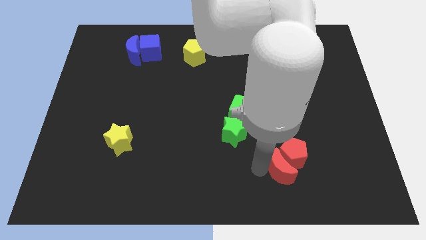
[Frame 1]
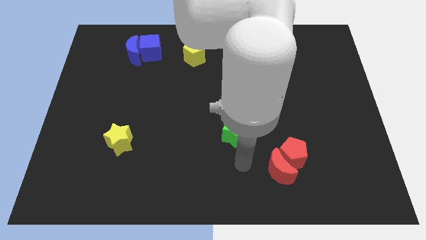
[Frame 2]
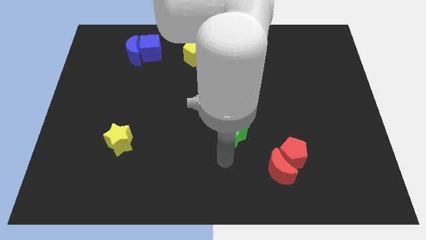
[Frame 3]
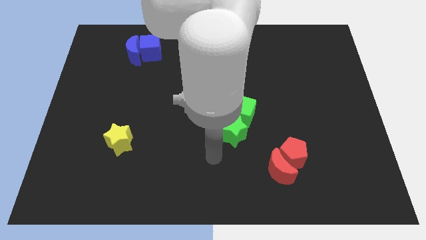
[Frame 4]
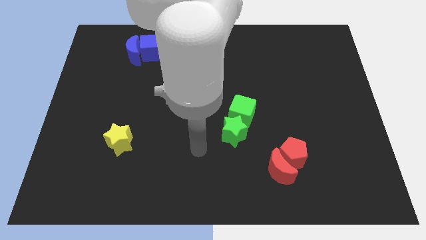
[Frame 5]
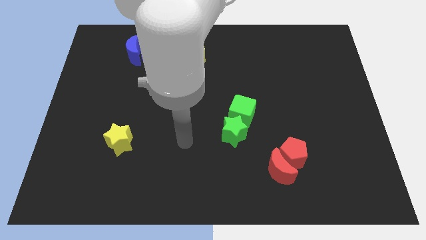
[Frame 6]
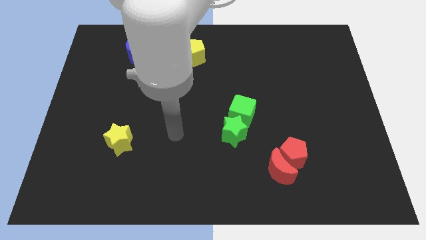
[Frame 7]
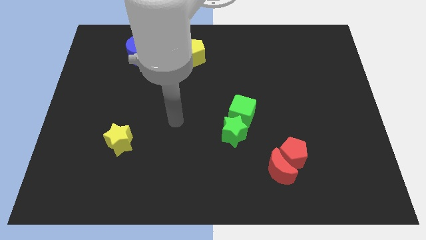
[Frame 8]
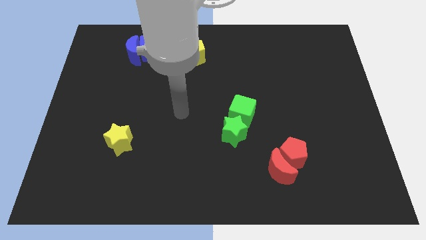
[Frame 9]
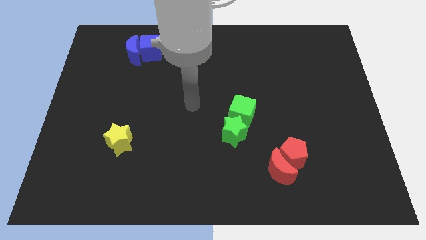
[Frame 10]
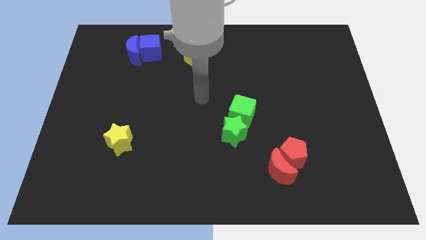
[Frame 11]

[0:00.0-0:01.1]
move your hand away from red moon

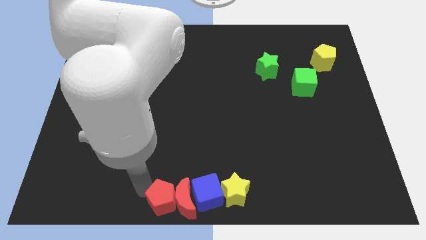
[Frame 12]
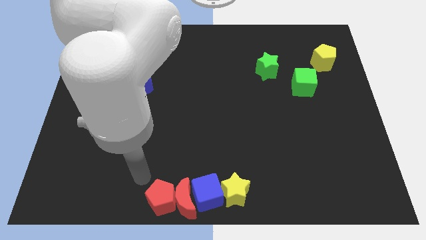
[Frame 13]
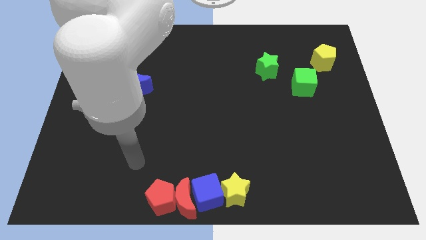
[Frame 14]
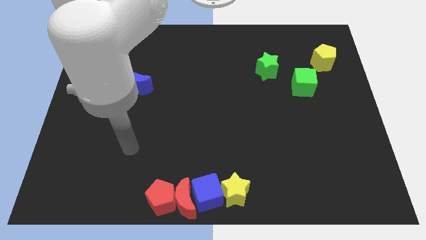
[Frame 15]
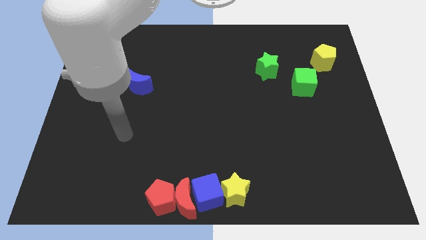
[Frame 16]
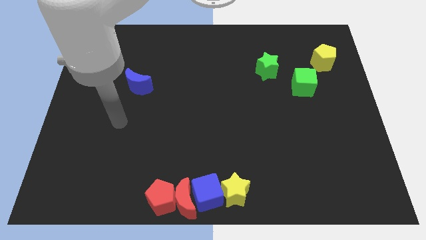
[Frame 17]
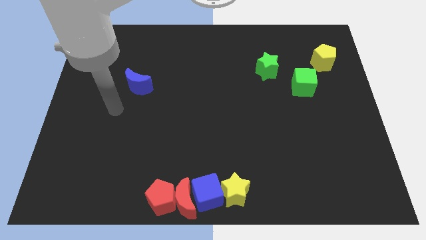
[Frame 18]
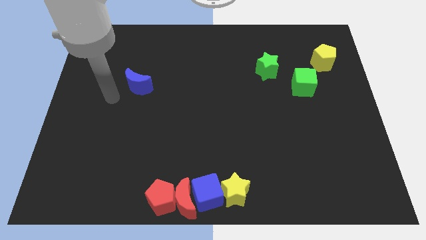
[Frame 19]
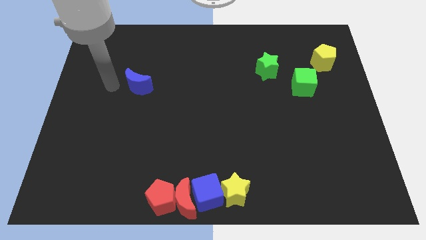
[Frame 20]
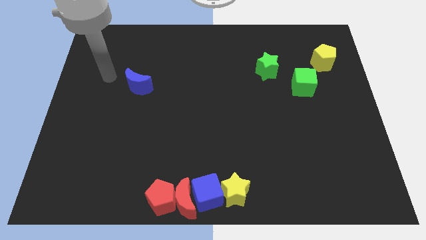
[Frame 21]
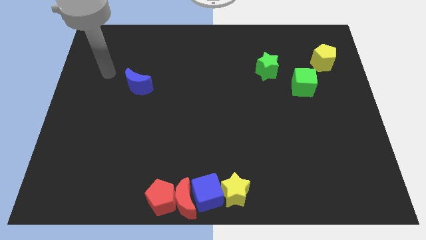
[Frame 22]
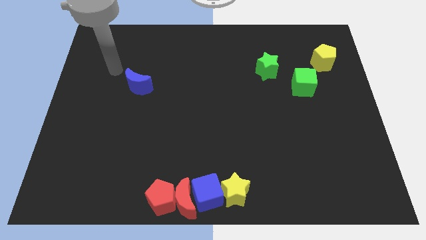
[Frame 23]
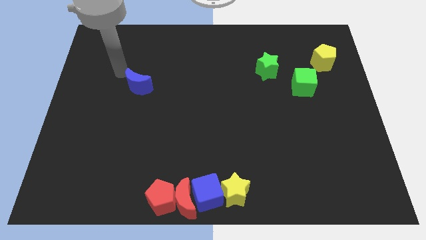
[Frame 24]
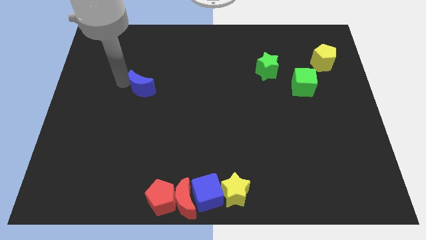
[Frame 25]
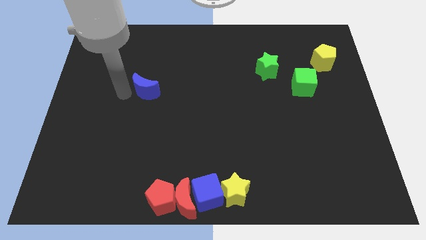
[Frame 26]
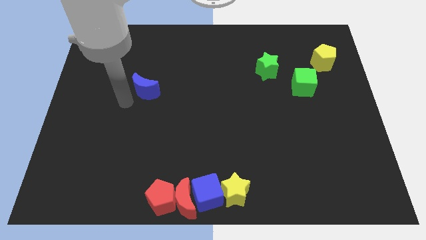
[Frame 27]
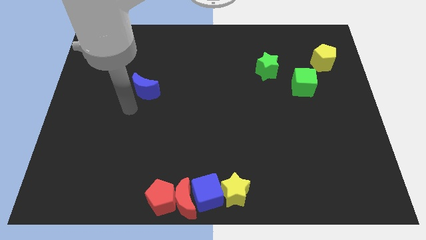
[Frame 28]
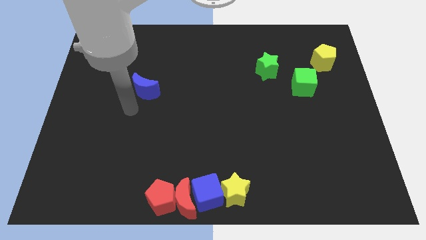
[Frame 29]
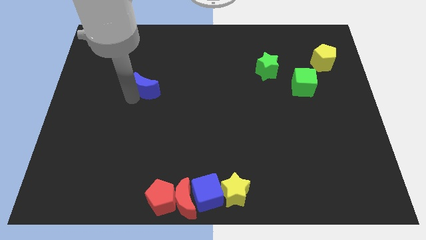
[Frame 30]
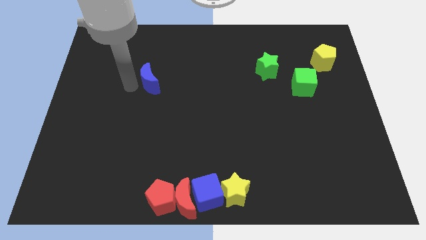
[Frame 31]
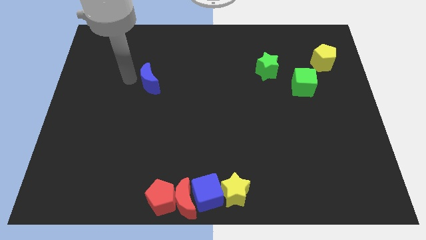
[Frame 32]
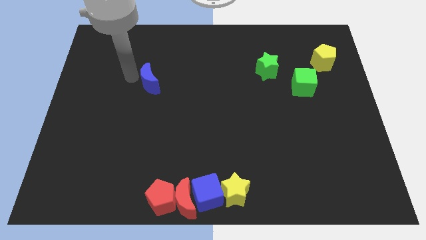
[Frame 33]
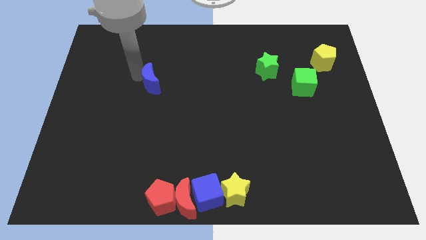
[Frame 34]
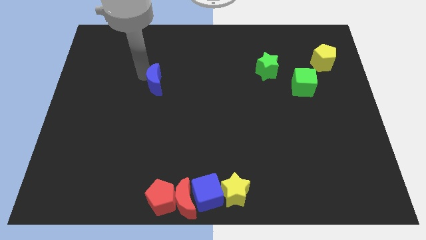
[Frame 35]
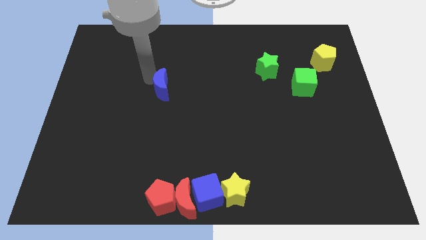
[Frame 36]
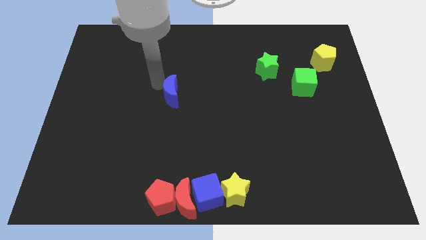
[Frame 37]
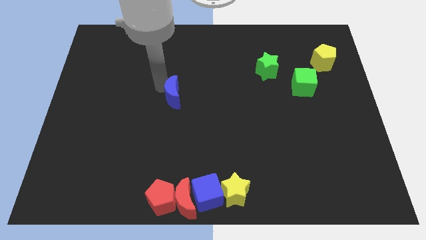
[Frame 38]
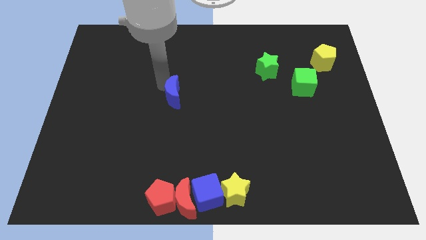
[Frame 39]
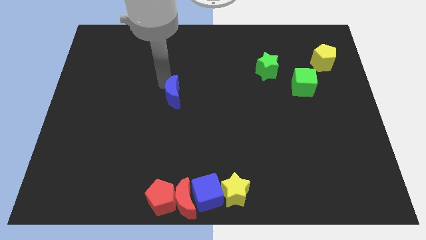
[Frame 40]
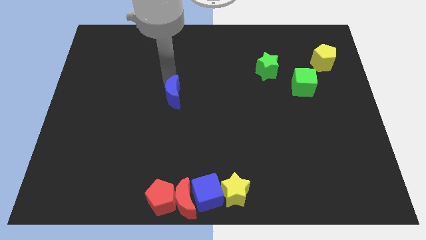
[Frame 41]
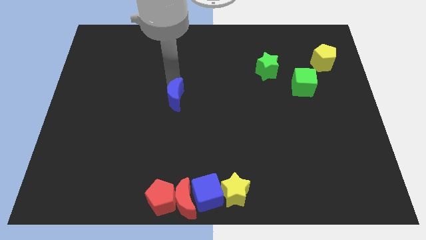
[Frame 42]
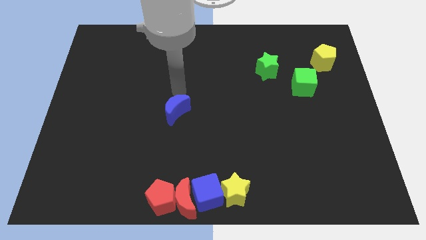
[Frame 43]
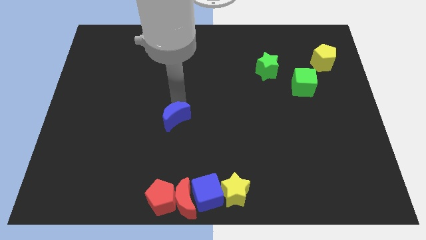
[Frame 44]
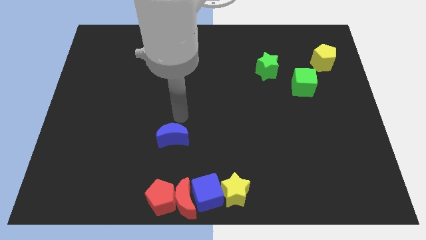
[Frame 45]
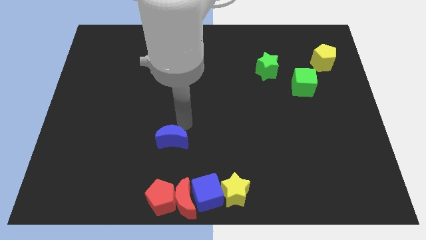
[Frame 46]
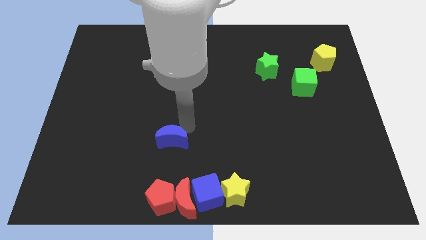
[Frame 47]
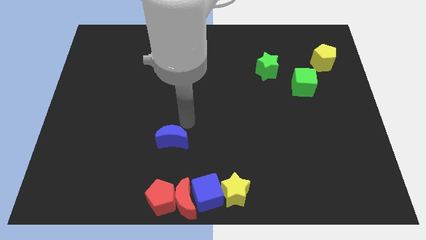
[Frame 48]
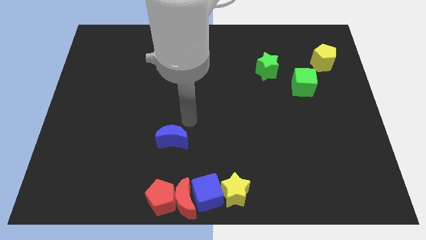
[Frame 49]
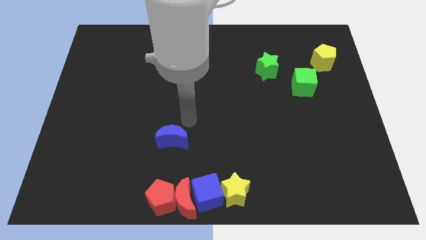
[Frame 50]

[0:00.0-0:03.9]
put the blue crescent vertically above the red blocks

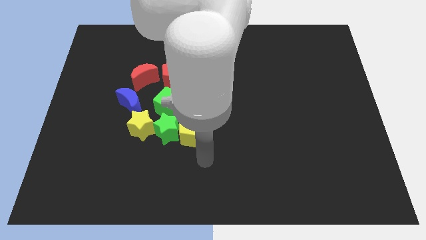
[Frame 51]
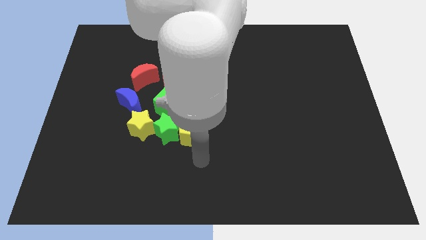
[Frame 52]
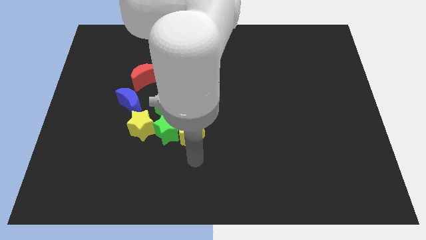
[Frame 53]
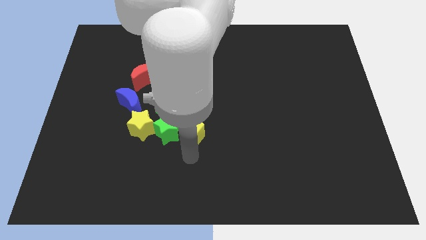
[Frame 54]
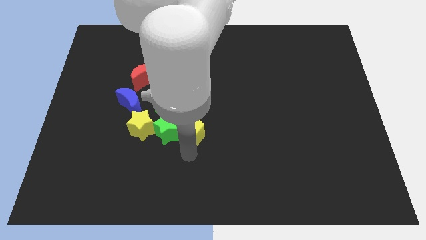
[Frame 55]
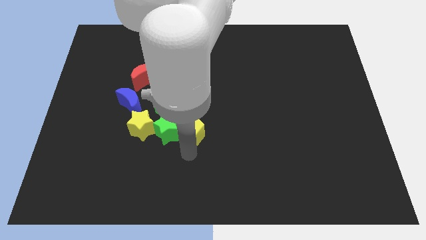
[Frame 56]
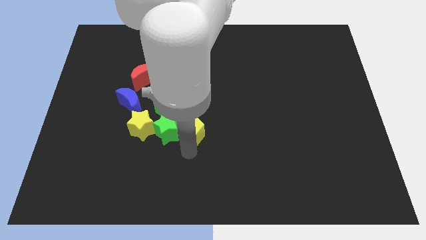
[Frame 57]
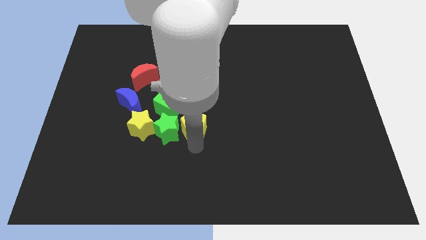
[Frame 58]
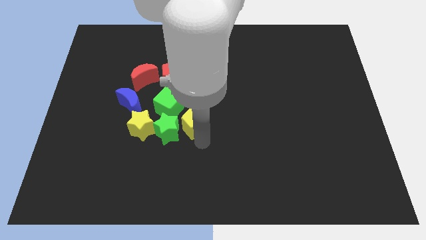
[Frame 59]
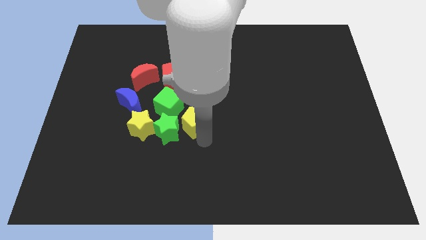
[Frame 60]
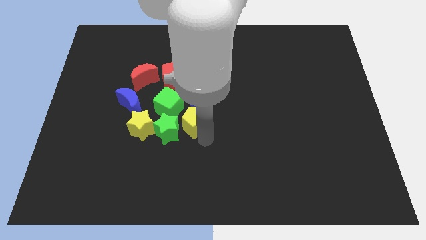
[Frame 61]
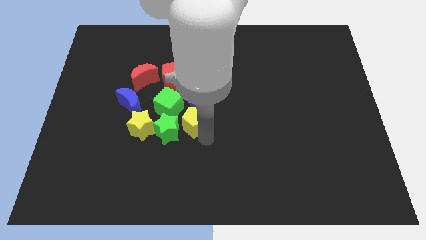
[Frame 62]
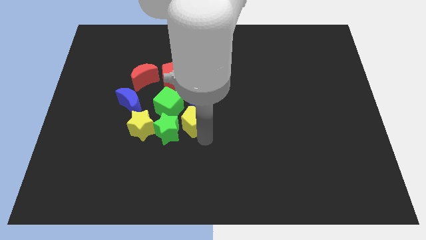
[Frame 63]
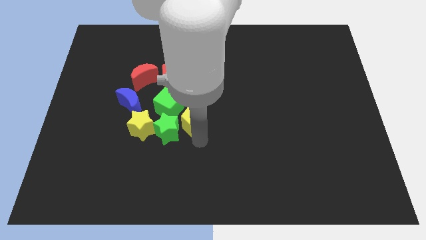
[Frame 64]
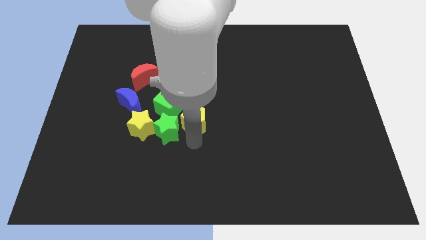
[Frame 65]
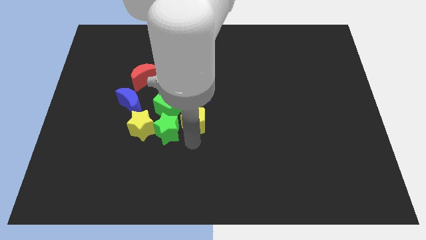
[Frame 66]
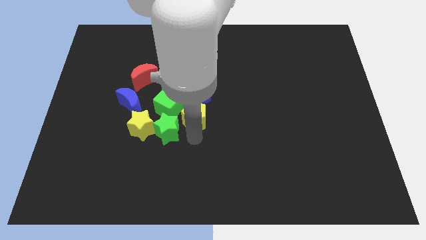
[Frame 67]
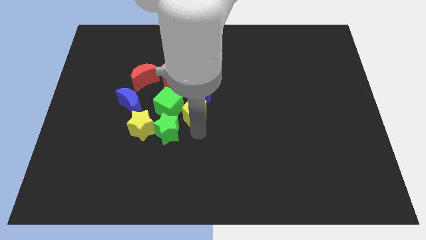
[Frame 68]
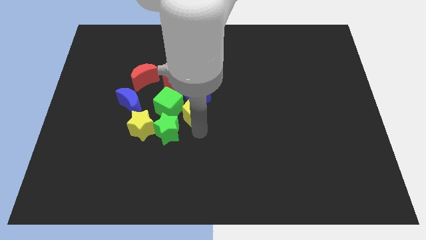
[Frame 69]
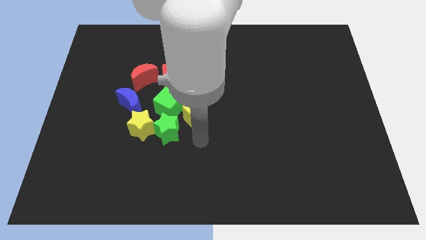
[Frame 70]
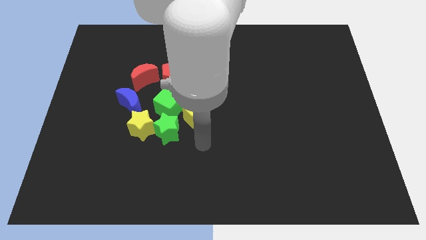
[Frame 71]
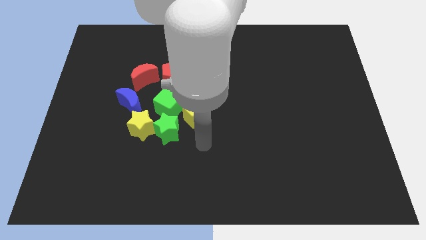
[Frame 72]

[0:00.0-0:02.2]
move the yellow pentagon into the blue cube

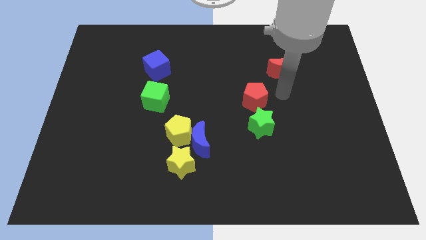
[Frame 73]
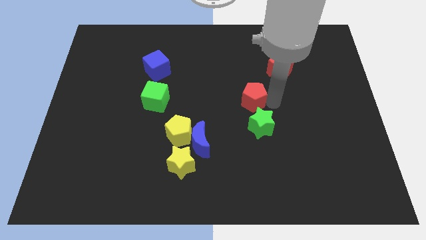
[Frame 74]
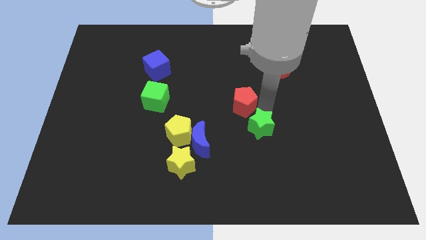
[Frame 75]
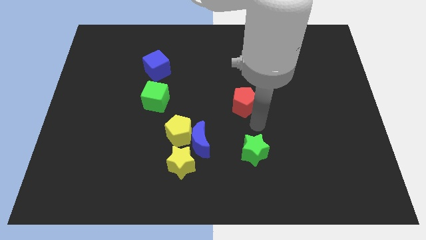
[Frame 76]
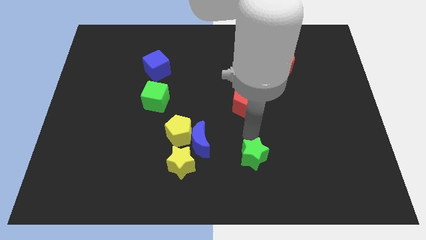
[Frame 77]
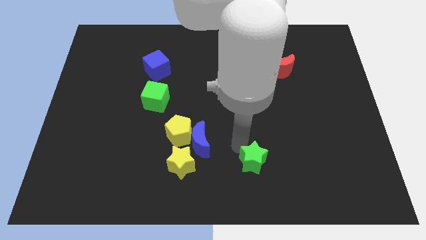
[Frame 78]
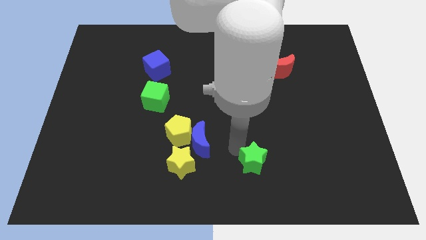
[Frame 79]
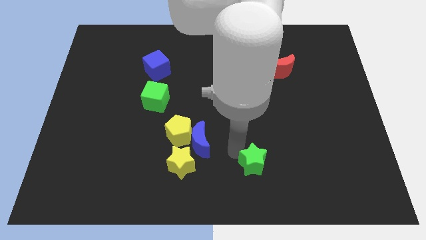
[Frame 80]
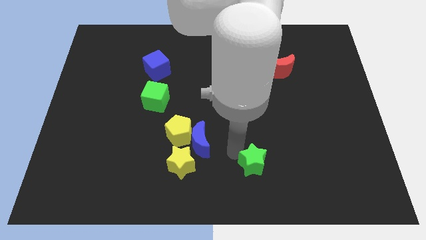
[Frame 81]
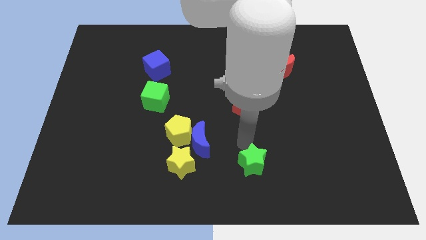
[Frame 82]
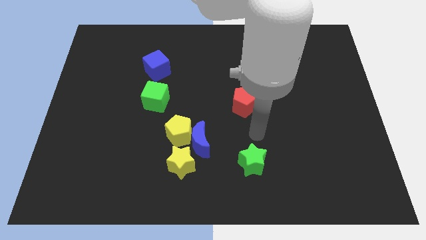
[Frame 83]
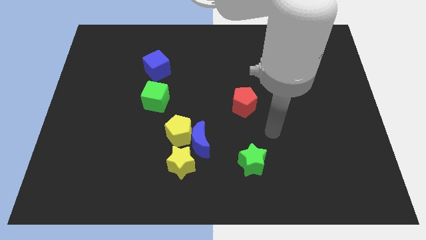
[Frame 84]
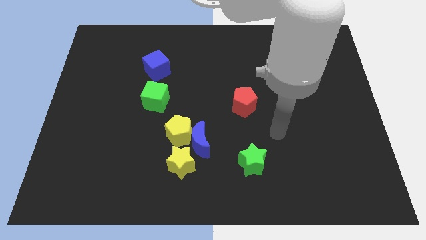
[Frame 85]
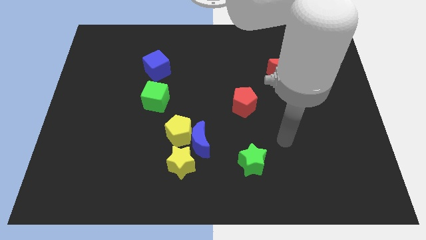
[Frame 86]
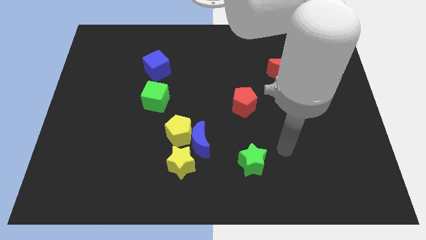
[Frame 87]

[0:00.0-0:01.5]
separate green star and the red pentagon

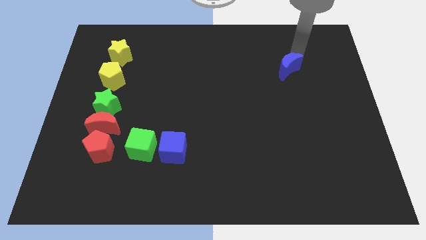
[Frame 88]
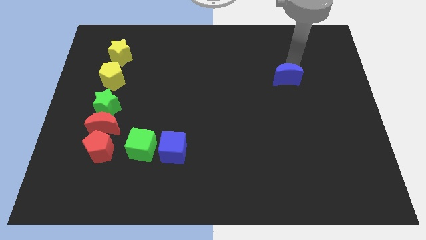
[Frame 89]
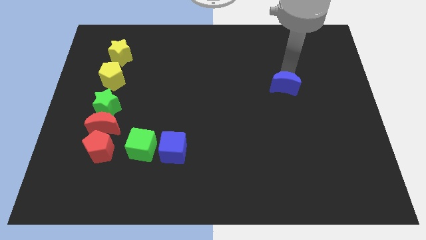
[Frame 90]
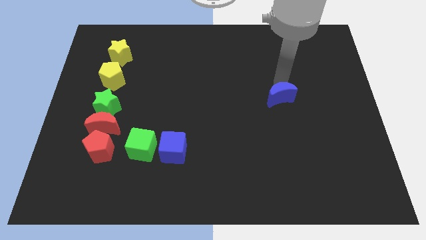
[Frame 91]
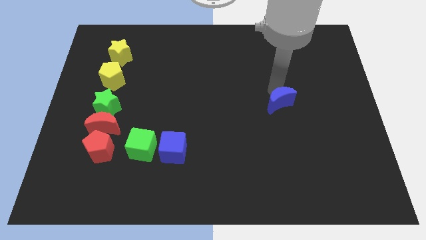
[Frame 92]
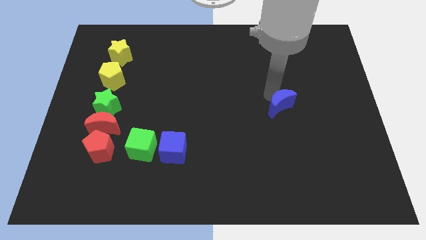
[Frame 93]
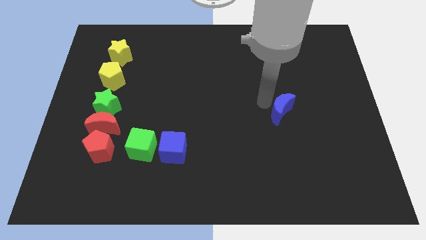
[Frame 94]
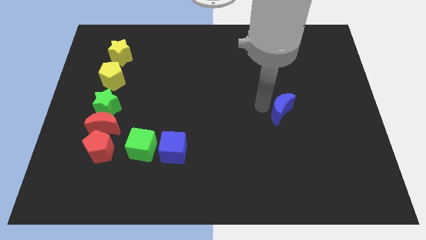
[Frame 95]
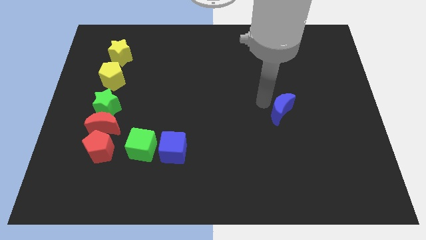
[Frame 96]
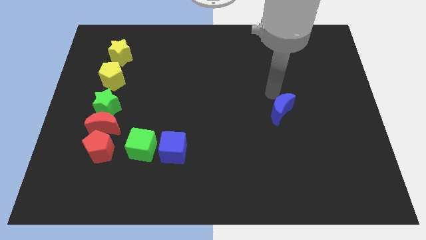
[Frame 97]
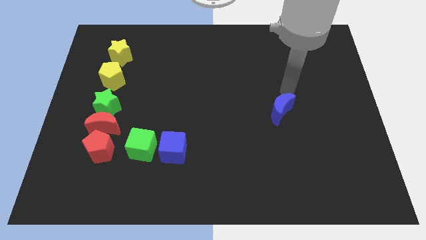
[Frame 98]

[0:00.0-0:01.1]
move your arm near the blue moon
